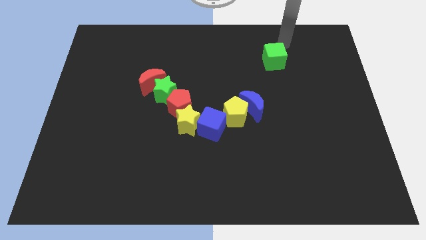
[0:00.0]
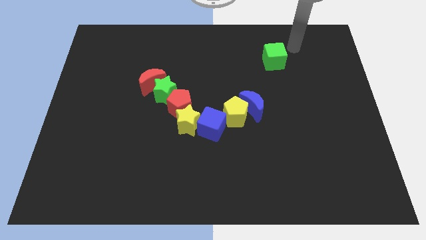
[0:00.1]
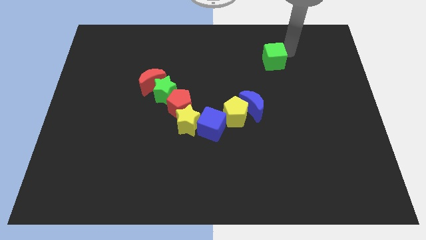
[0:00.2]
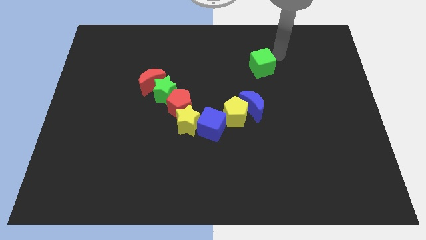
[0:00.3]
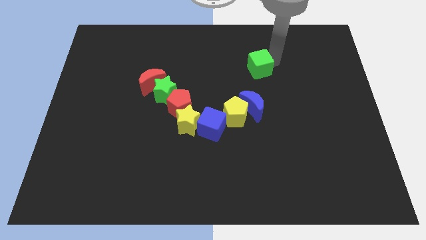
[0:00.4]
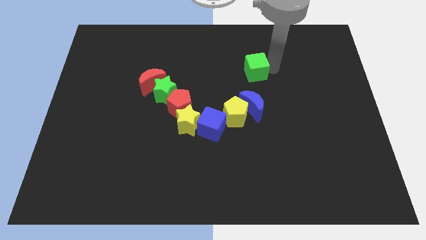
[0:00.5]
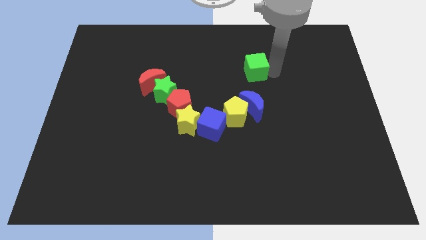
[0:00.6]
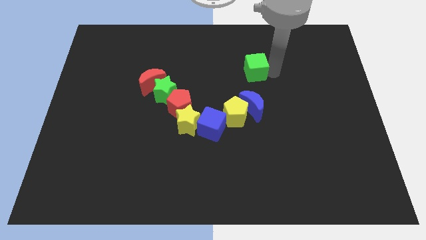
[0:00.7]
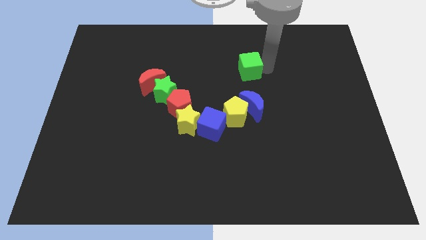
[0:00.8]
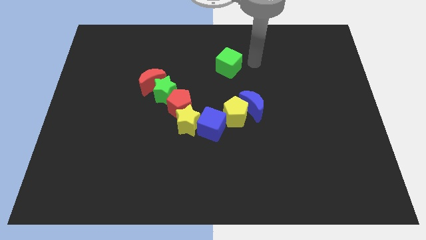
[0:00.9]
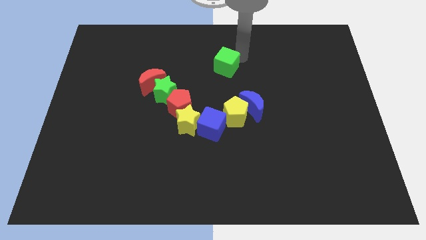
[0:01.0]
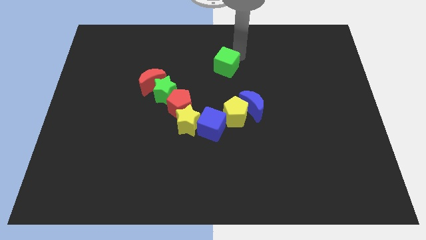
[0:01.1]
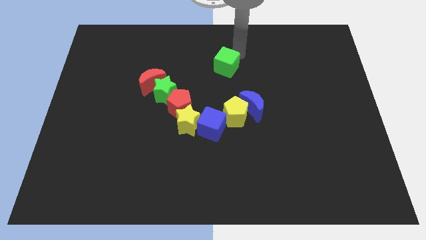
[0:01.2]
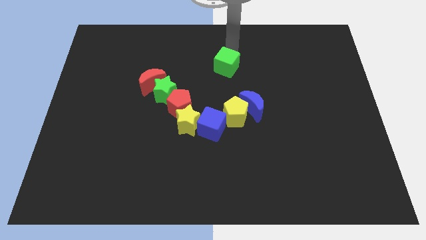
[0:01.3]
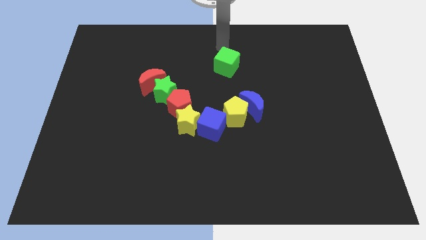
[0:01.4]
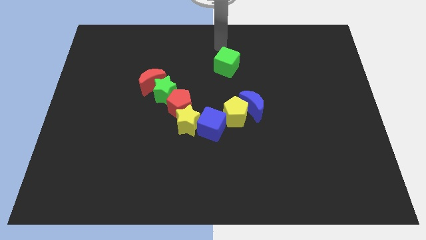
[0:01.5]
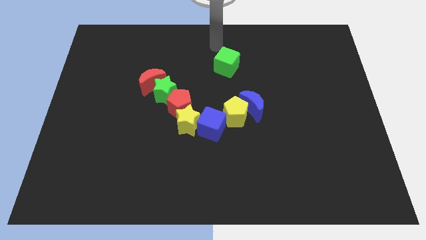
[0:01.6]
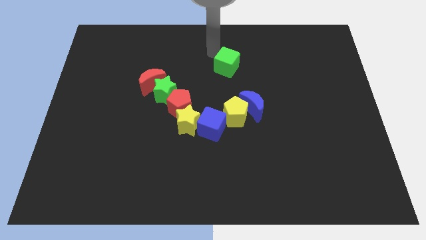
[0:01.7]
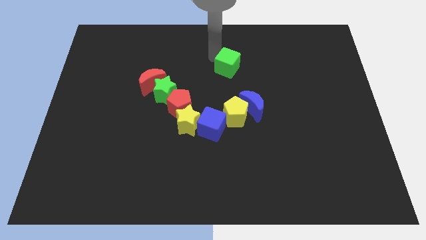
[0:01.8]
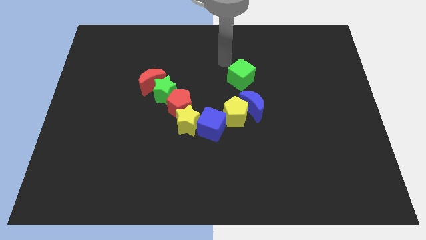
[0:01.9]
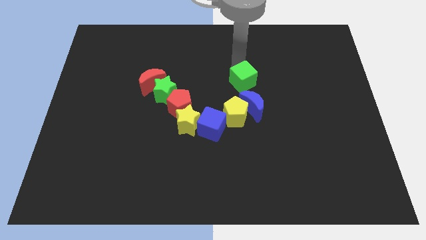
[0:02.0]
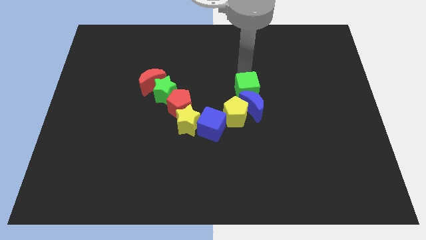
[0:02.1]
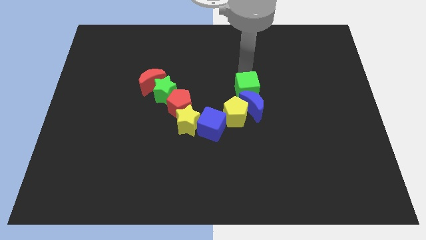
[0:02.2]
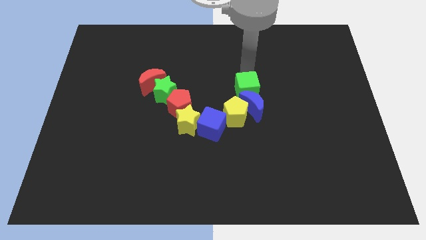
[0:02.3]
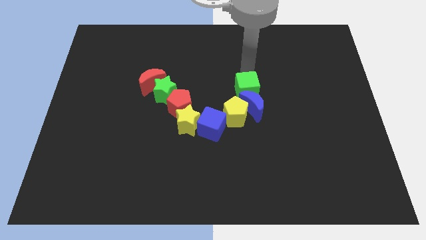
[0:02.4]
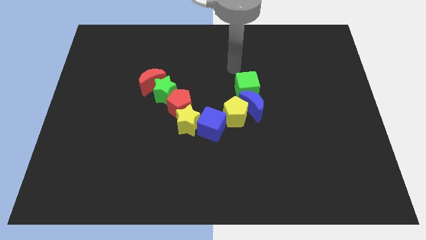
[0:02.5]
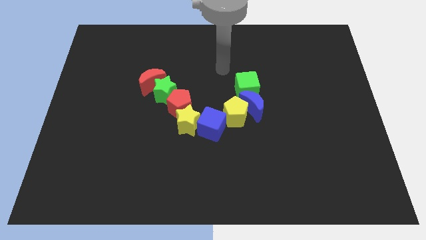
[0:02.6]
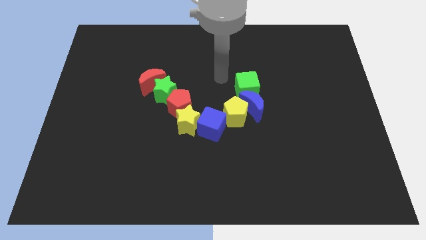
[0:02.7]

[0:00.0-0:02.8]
move the green cube above to the blue crescent

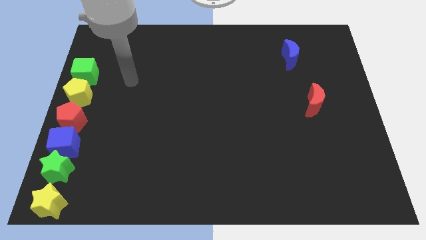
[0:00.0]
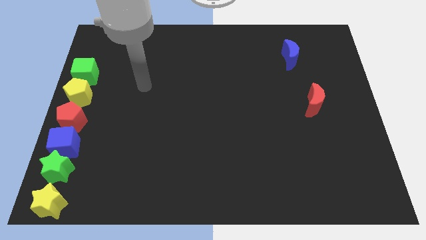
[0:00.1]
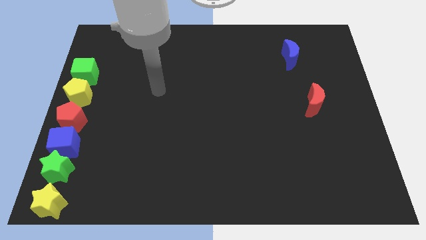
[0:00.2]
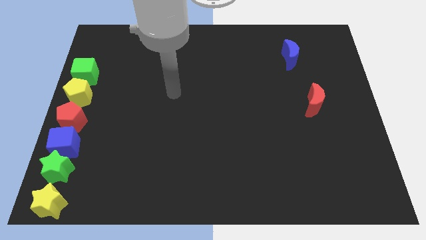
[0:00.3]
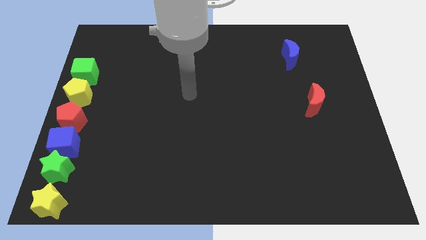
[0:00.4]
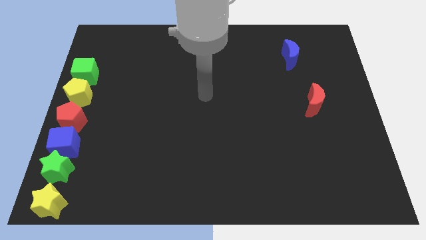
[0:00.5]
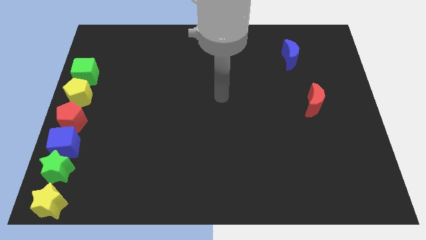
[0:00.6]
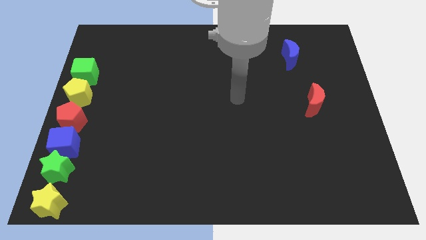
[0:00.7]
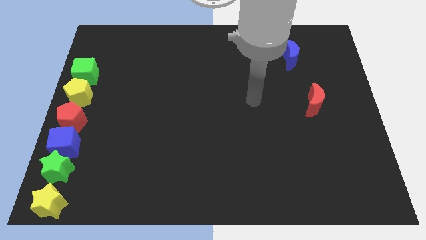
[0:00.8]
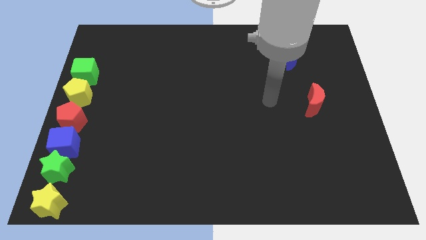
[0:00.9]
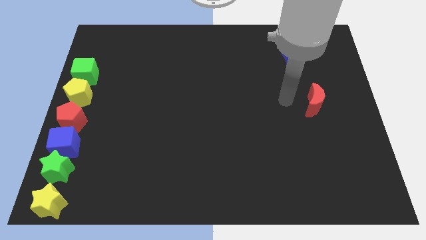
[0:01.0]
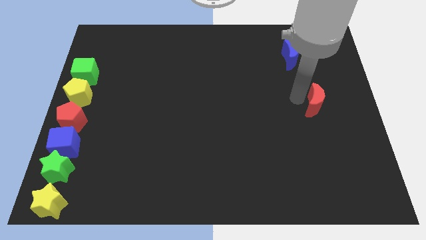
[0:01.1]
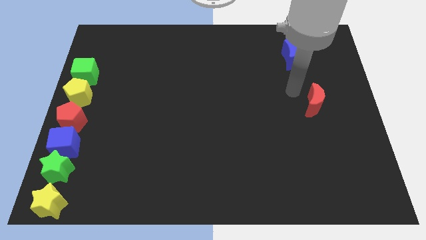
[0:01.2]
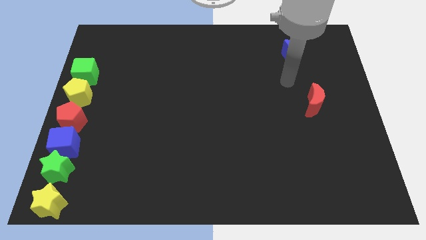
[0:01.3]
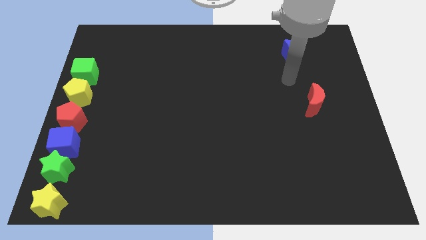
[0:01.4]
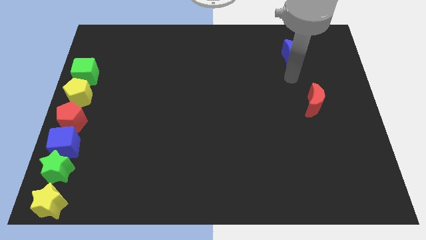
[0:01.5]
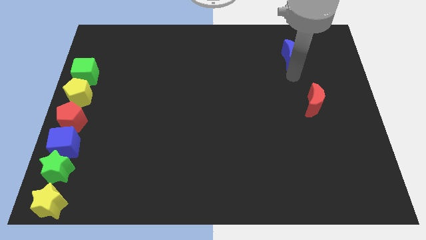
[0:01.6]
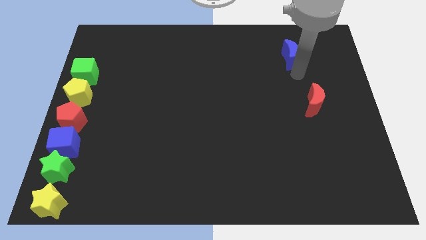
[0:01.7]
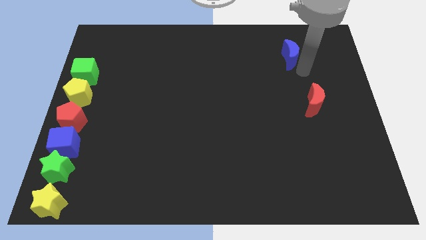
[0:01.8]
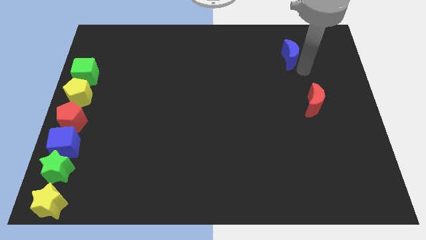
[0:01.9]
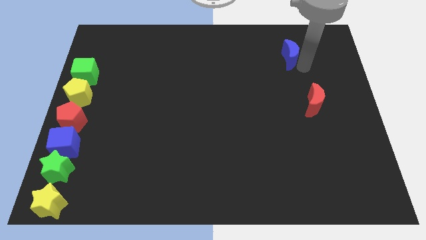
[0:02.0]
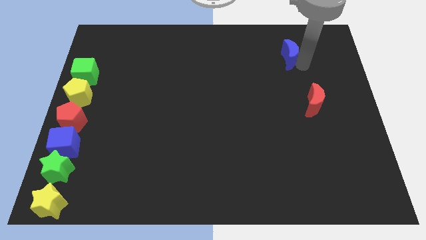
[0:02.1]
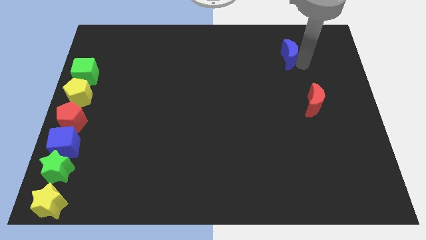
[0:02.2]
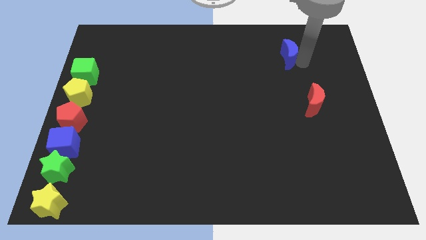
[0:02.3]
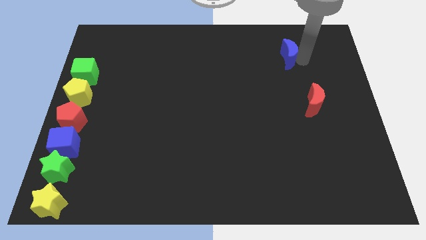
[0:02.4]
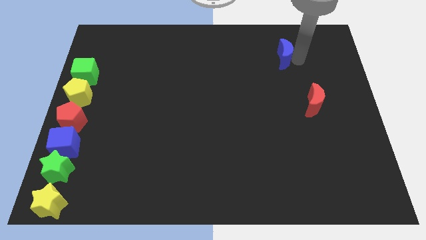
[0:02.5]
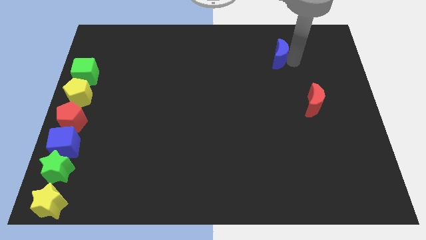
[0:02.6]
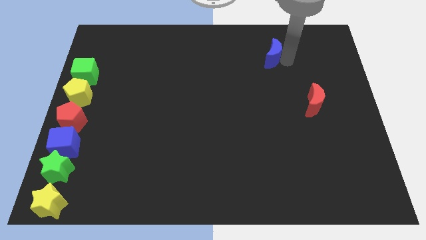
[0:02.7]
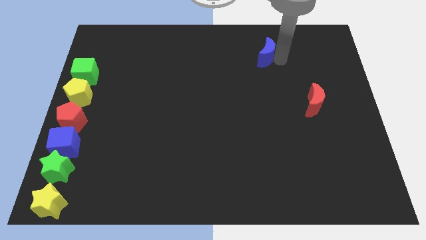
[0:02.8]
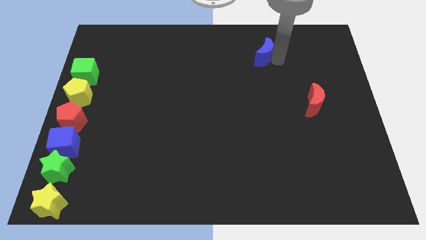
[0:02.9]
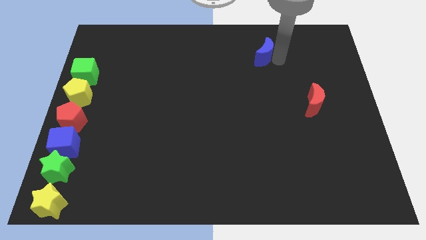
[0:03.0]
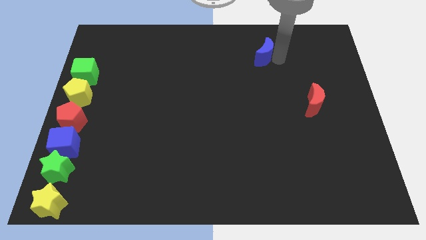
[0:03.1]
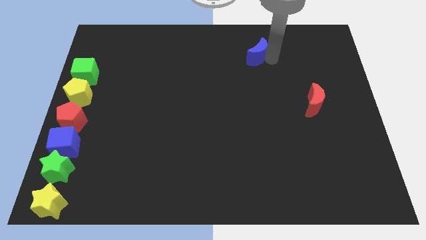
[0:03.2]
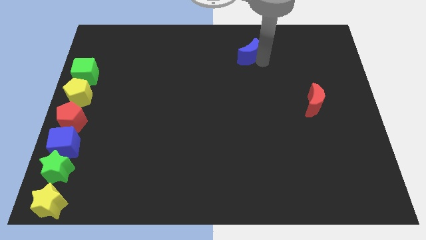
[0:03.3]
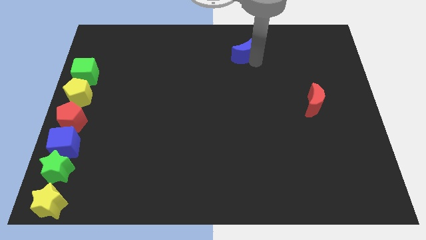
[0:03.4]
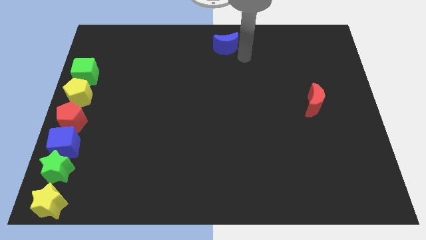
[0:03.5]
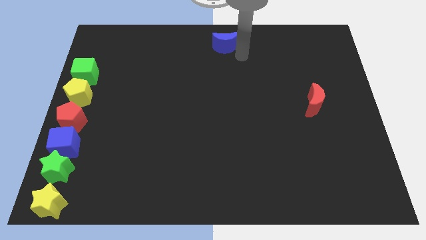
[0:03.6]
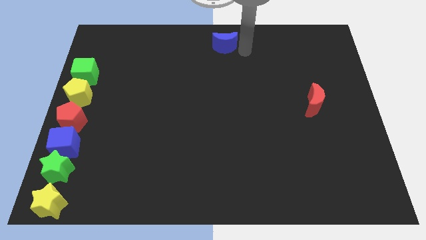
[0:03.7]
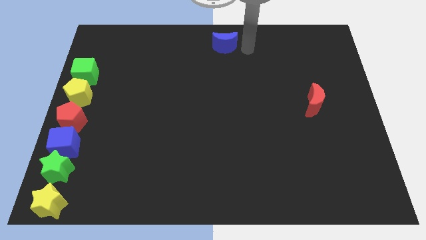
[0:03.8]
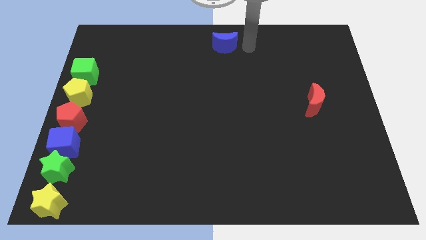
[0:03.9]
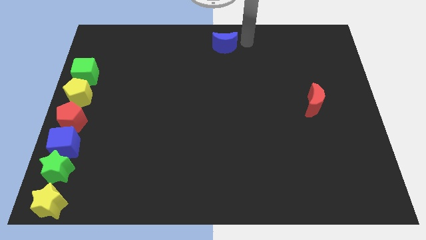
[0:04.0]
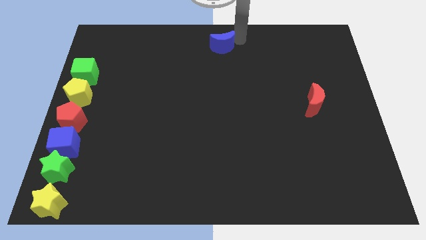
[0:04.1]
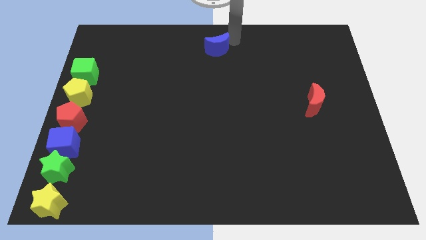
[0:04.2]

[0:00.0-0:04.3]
place the blue crescent at the top center of the board

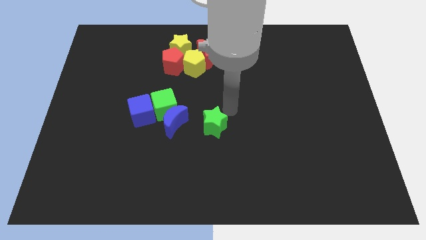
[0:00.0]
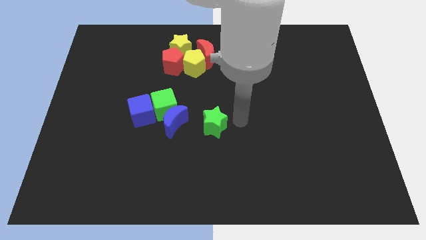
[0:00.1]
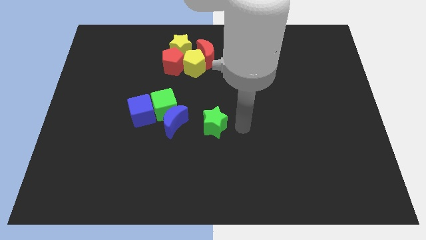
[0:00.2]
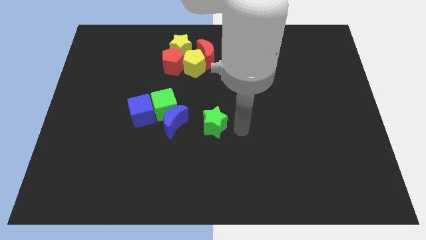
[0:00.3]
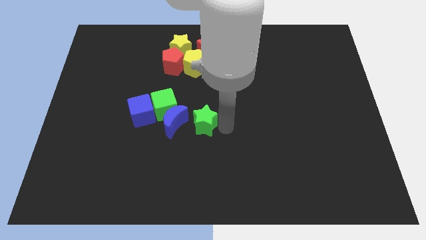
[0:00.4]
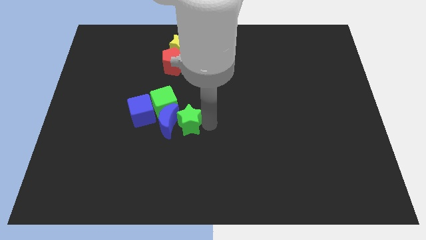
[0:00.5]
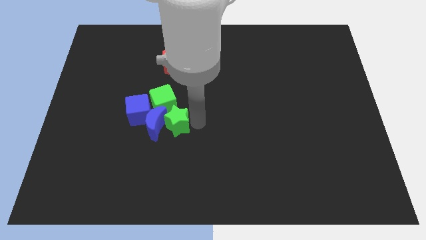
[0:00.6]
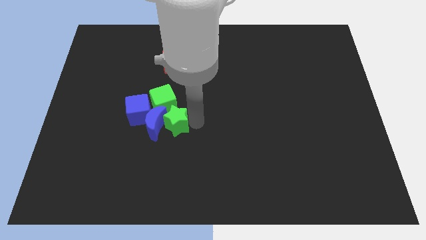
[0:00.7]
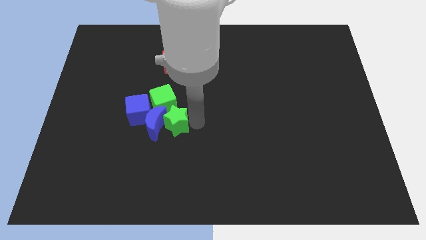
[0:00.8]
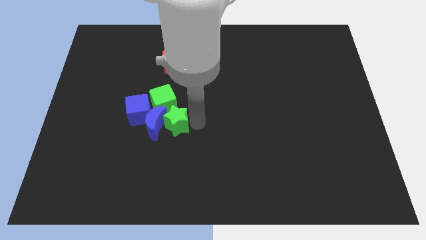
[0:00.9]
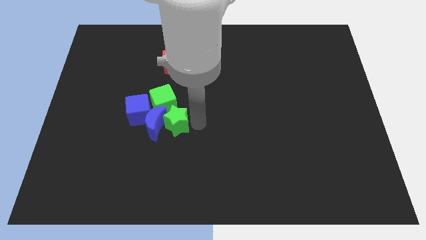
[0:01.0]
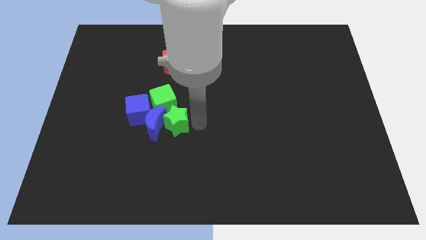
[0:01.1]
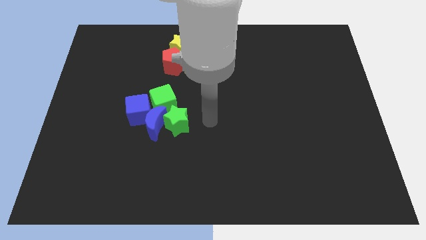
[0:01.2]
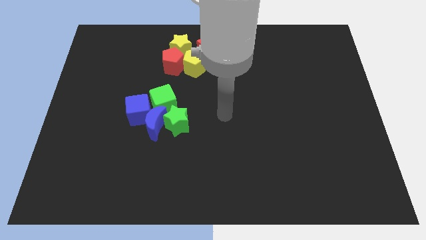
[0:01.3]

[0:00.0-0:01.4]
move the green star into the blue cube

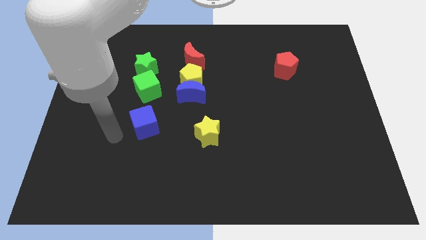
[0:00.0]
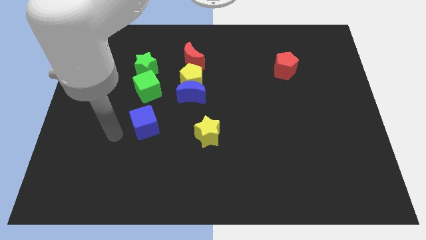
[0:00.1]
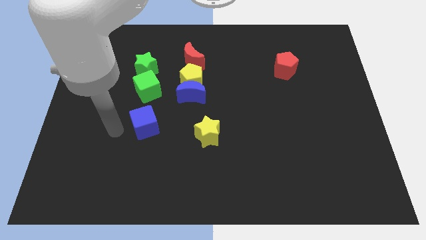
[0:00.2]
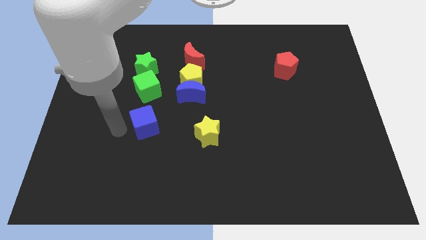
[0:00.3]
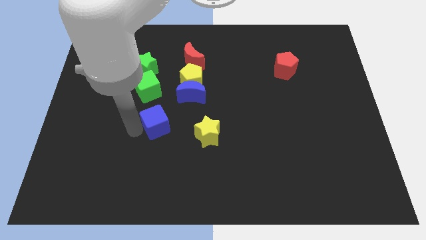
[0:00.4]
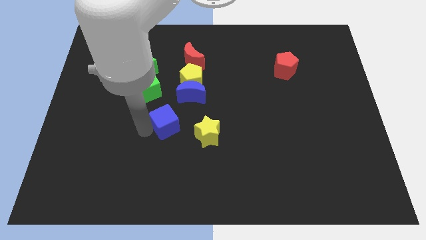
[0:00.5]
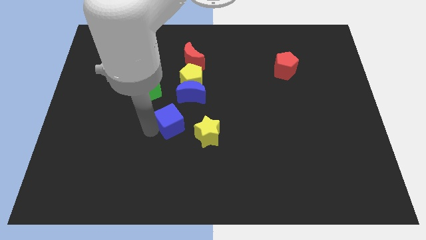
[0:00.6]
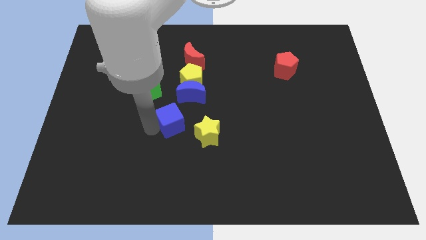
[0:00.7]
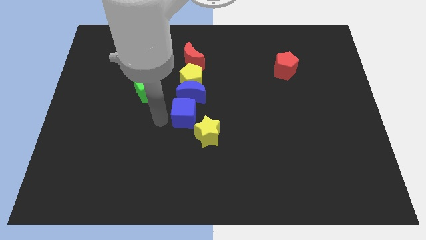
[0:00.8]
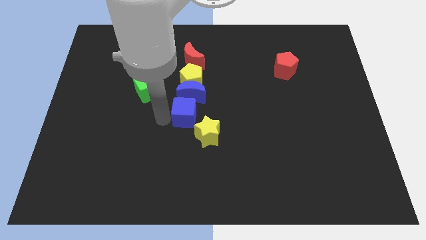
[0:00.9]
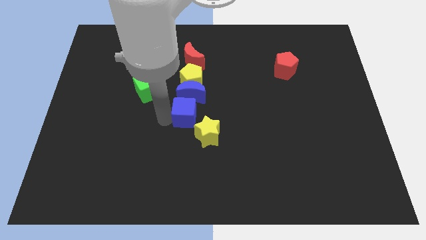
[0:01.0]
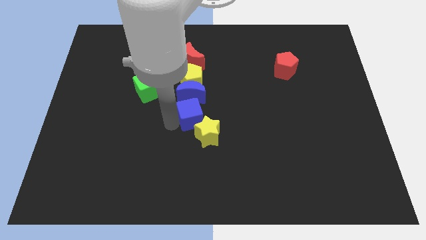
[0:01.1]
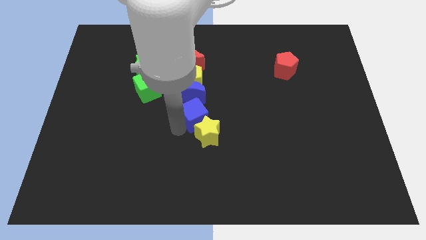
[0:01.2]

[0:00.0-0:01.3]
move the blue cube to the bottom side of the blue moon
